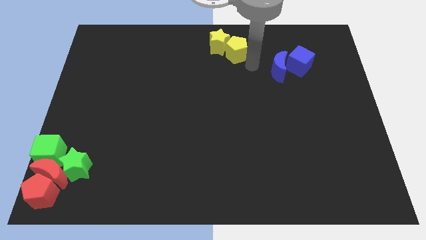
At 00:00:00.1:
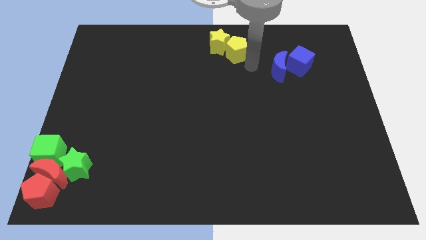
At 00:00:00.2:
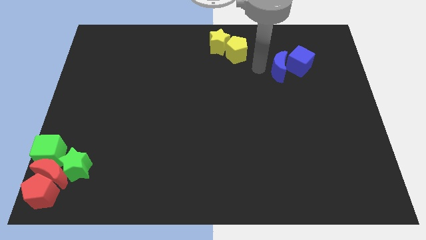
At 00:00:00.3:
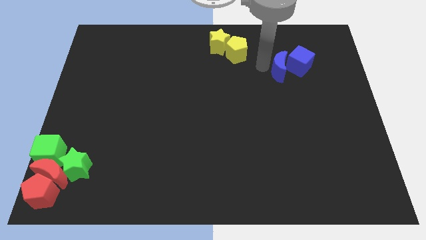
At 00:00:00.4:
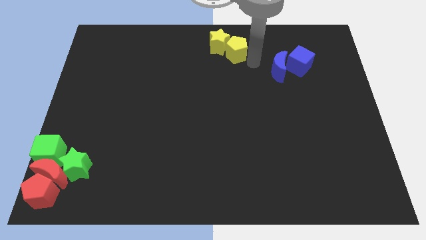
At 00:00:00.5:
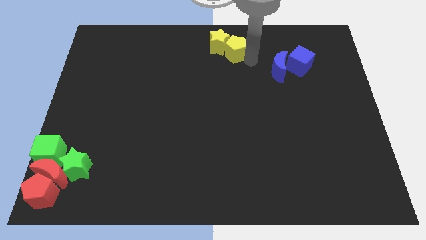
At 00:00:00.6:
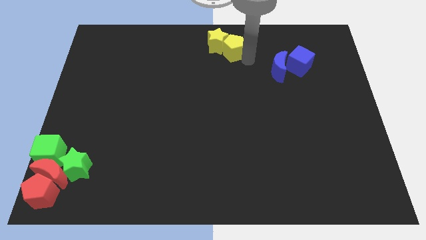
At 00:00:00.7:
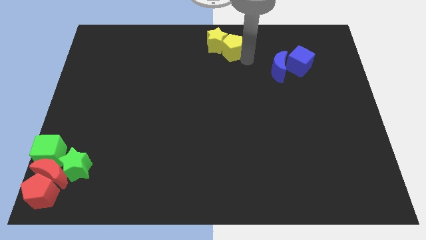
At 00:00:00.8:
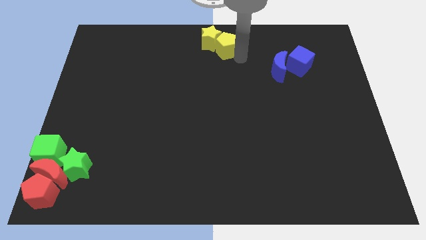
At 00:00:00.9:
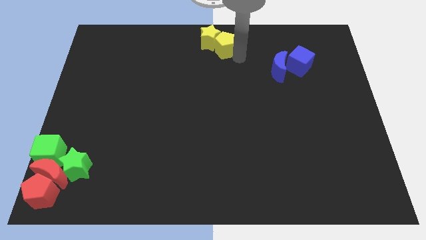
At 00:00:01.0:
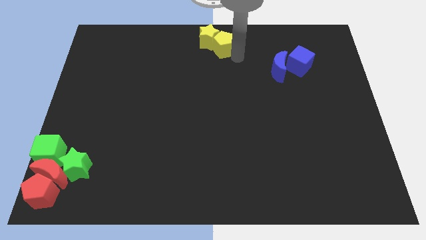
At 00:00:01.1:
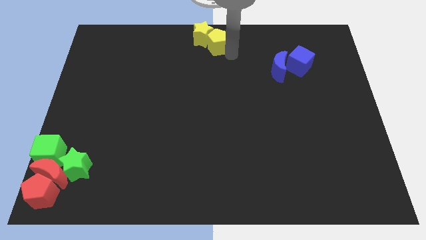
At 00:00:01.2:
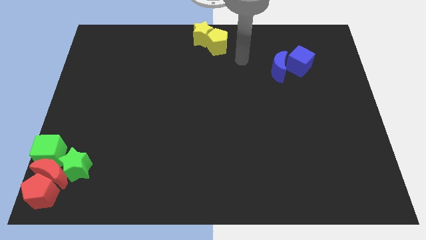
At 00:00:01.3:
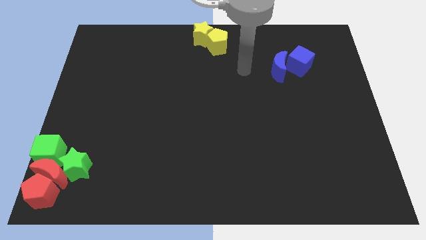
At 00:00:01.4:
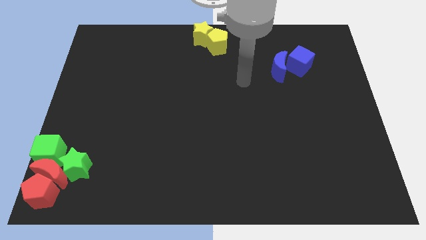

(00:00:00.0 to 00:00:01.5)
push the yellow pentagon into the yellow star

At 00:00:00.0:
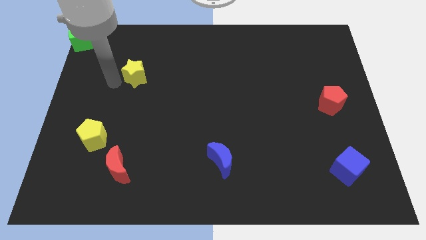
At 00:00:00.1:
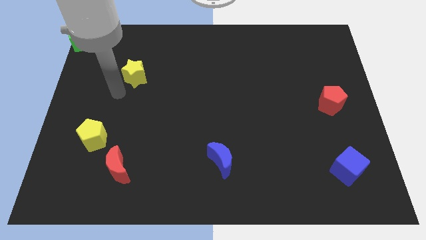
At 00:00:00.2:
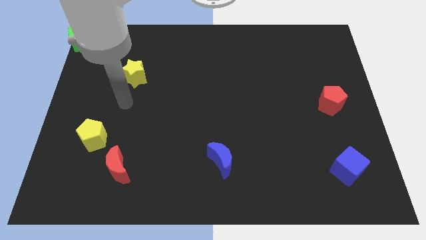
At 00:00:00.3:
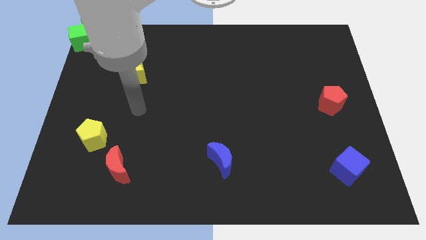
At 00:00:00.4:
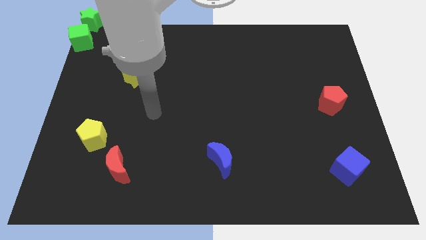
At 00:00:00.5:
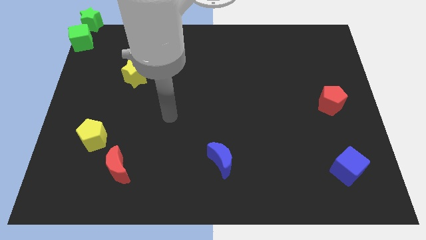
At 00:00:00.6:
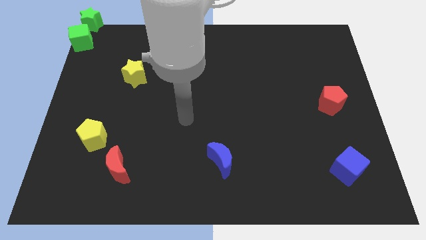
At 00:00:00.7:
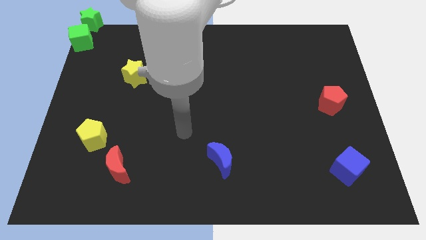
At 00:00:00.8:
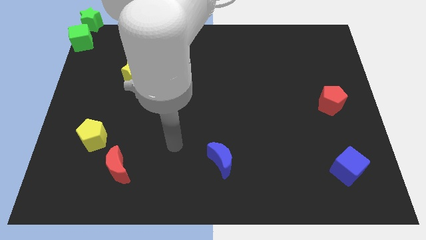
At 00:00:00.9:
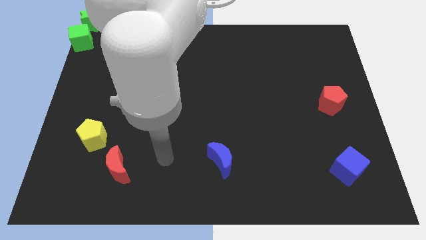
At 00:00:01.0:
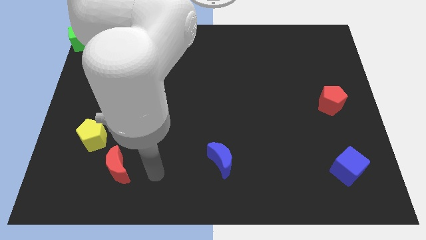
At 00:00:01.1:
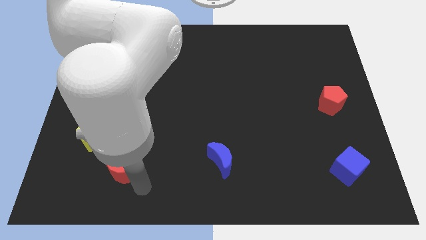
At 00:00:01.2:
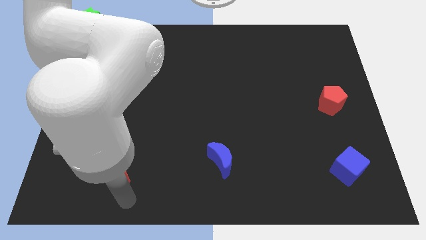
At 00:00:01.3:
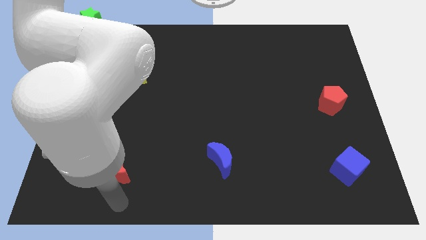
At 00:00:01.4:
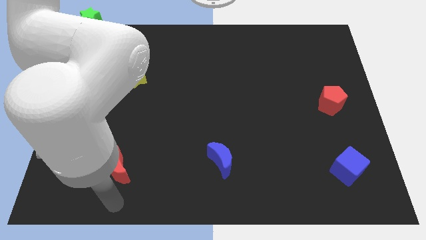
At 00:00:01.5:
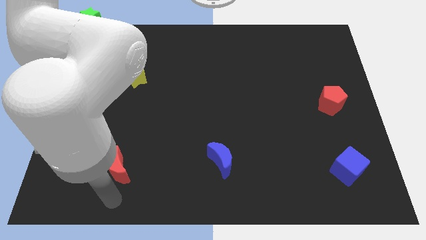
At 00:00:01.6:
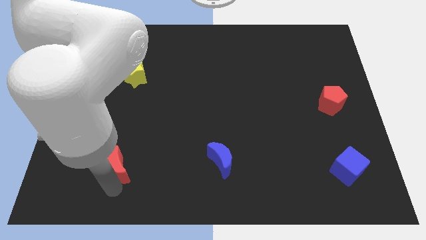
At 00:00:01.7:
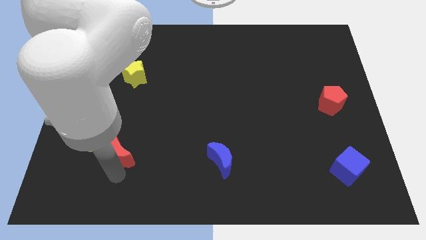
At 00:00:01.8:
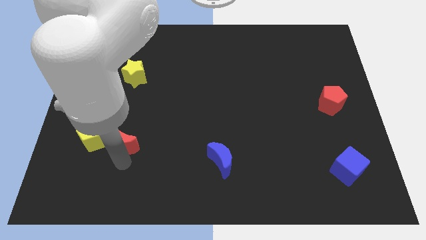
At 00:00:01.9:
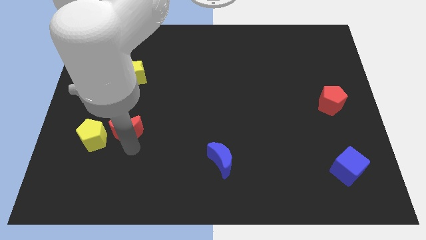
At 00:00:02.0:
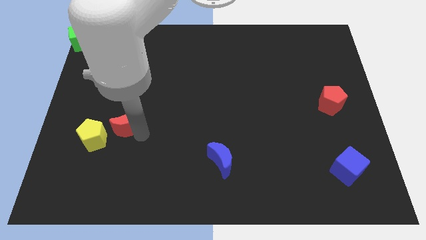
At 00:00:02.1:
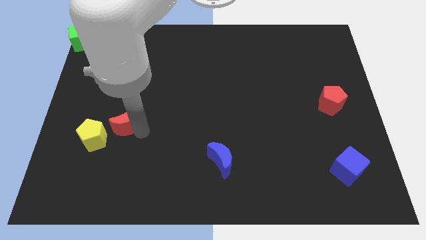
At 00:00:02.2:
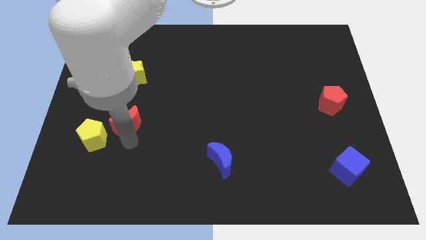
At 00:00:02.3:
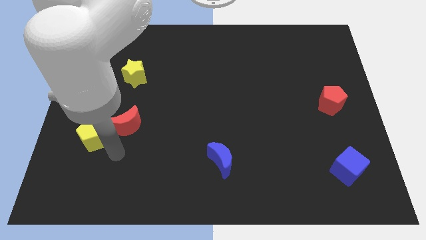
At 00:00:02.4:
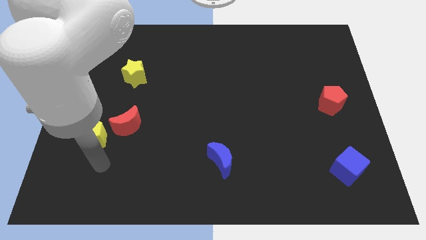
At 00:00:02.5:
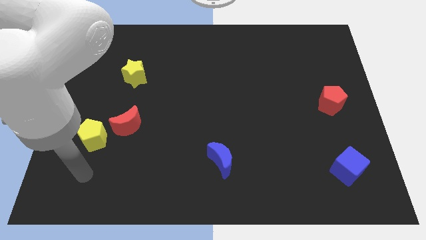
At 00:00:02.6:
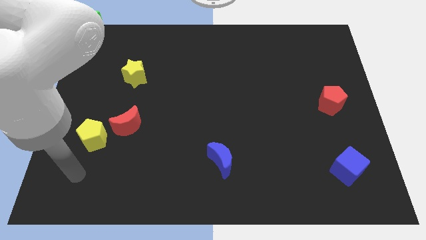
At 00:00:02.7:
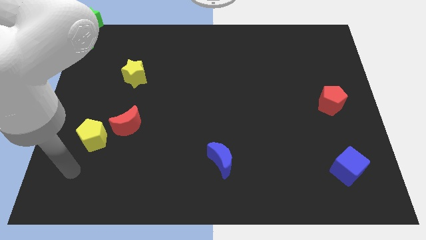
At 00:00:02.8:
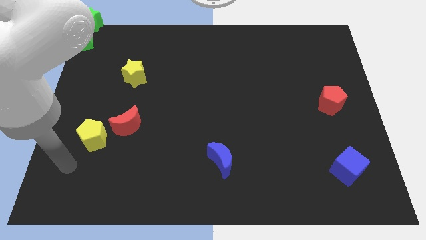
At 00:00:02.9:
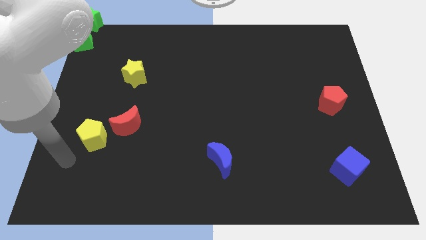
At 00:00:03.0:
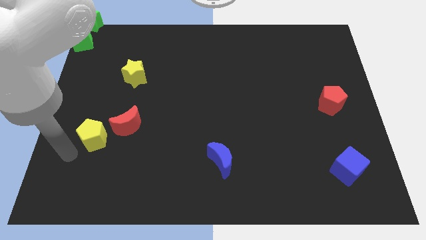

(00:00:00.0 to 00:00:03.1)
place the red moon at the top right side of yellow pentagon

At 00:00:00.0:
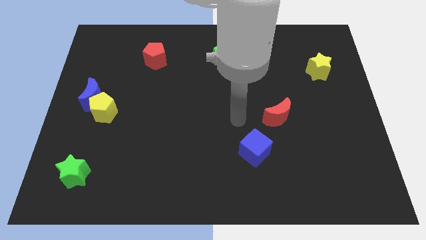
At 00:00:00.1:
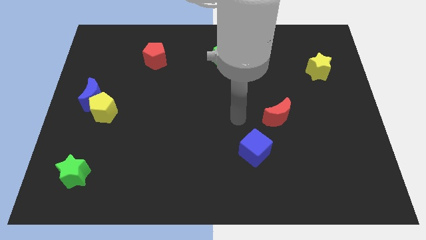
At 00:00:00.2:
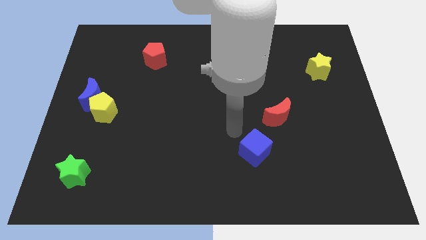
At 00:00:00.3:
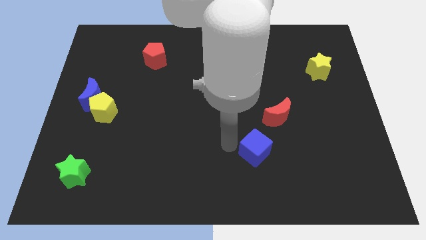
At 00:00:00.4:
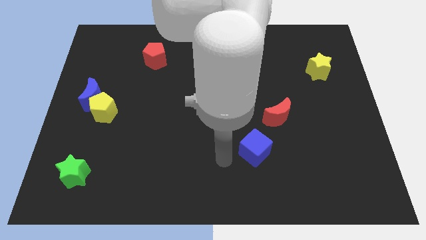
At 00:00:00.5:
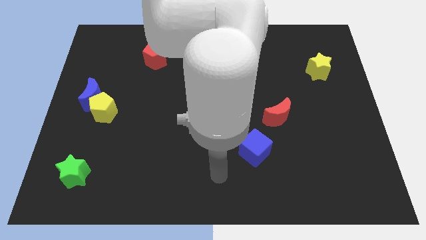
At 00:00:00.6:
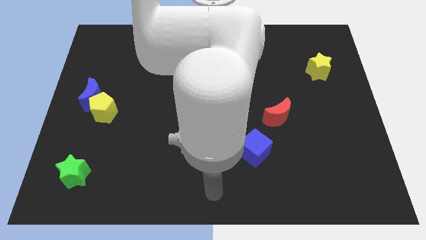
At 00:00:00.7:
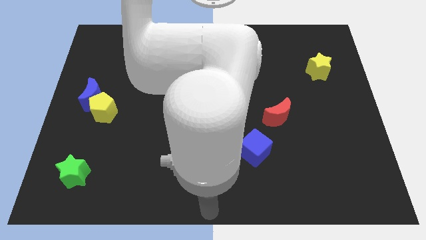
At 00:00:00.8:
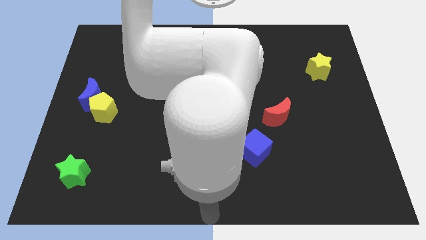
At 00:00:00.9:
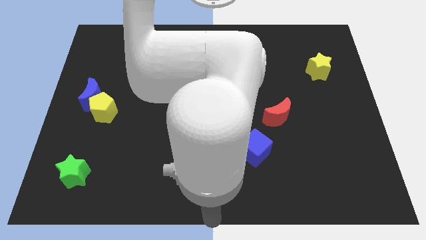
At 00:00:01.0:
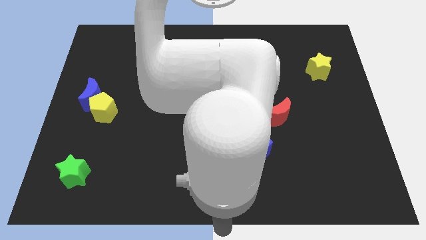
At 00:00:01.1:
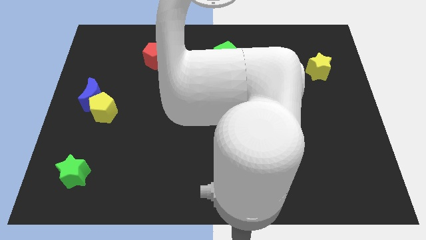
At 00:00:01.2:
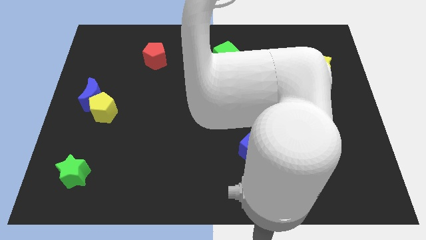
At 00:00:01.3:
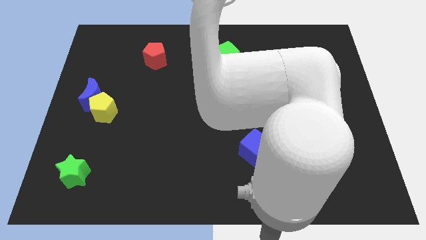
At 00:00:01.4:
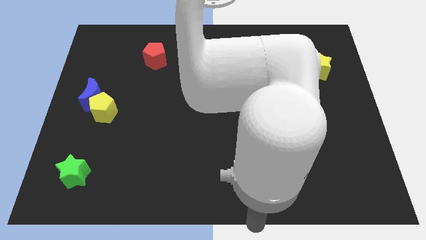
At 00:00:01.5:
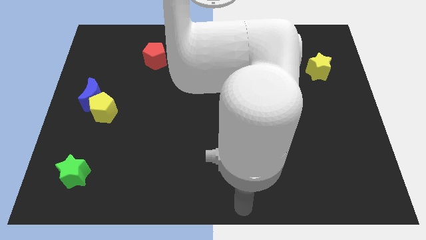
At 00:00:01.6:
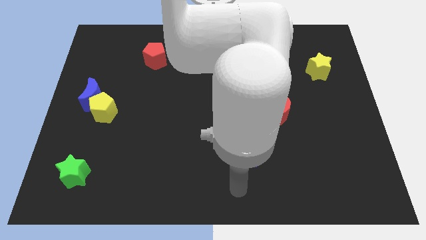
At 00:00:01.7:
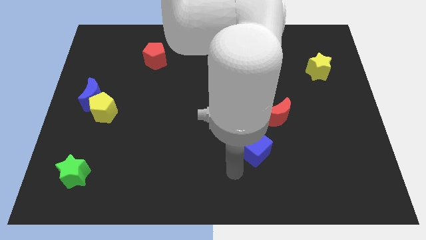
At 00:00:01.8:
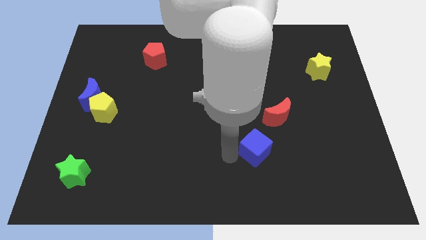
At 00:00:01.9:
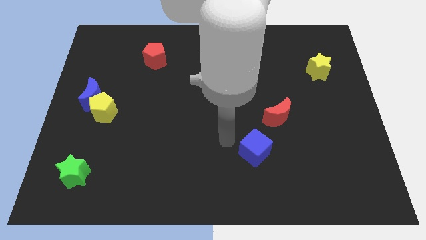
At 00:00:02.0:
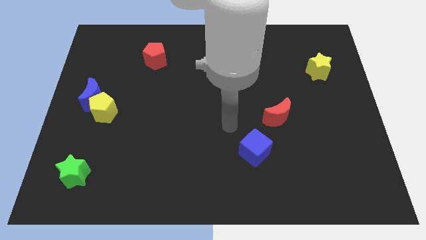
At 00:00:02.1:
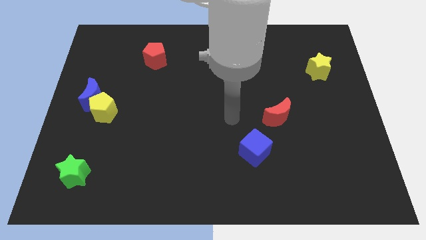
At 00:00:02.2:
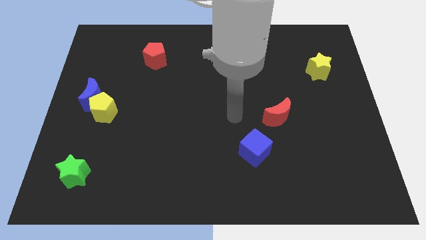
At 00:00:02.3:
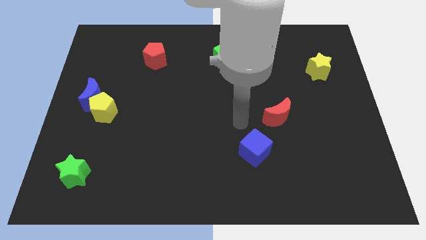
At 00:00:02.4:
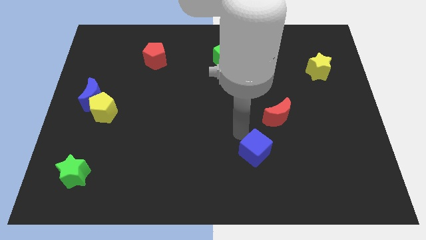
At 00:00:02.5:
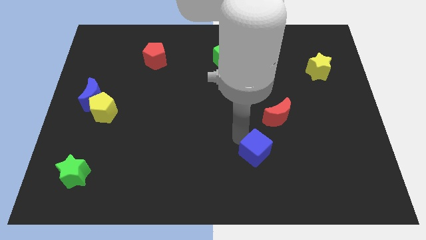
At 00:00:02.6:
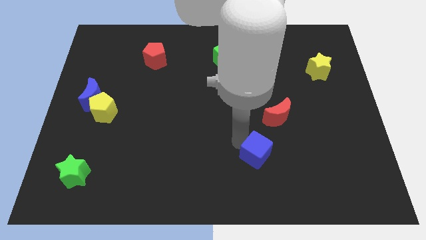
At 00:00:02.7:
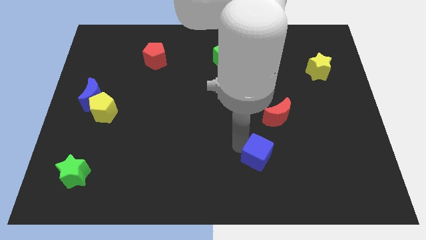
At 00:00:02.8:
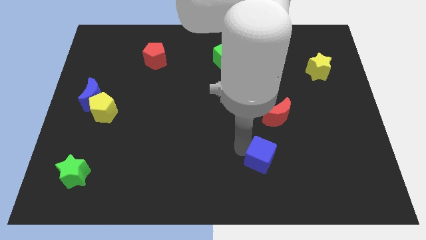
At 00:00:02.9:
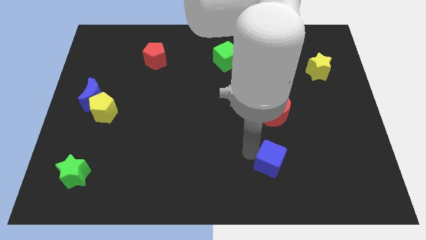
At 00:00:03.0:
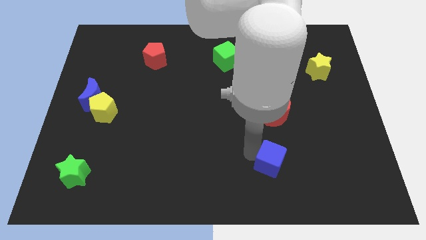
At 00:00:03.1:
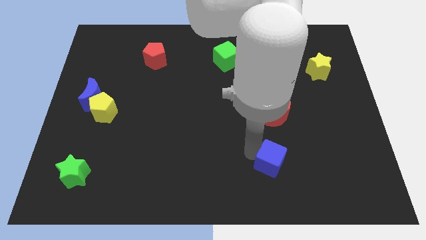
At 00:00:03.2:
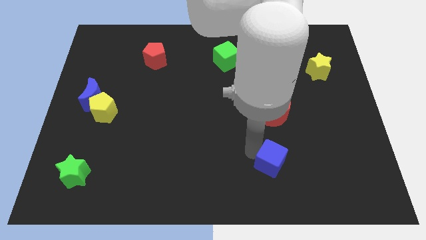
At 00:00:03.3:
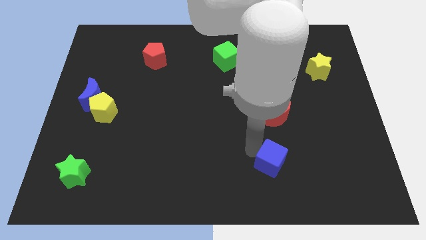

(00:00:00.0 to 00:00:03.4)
push the blue cube to the bottom of the red crescent

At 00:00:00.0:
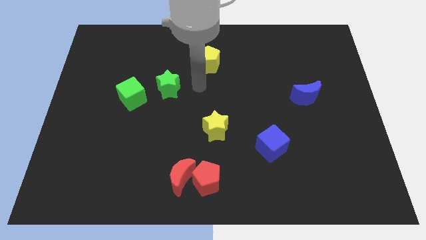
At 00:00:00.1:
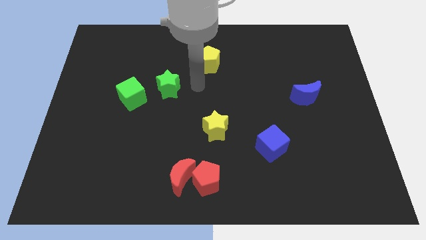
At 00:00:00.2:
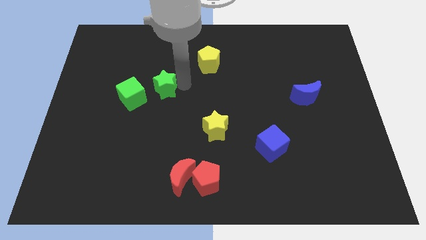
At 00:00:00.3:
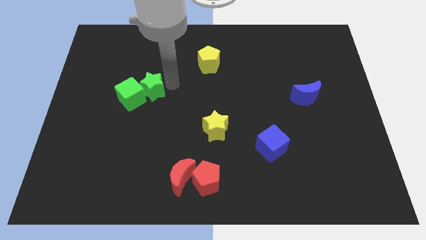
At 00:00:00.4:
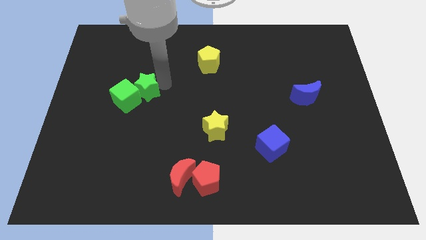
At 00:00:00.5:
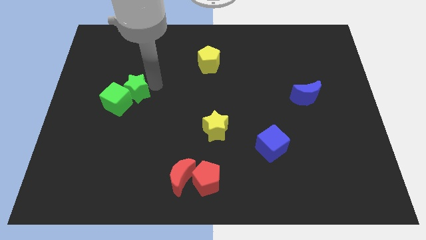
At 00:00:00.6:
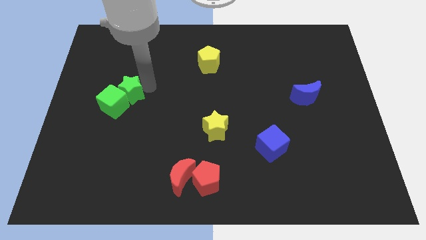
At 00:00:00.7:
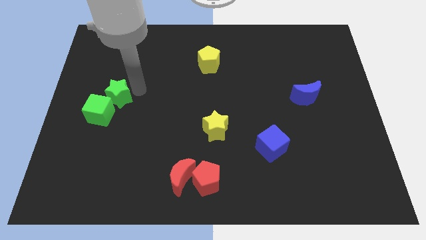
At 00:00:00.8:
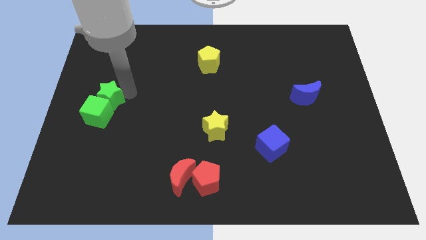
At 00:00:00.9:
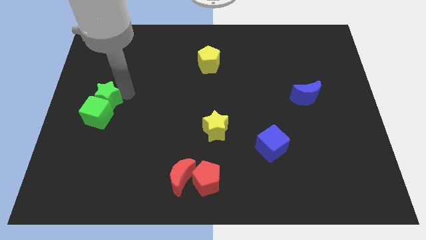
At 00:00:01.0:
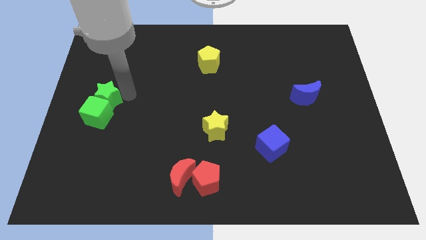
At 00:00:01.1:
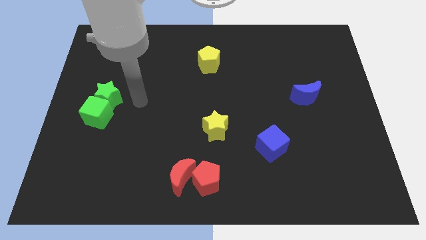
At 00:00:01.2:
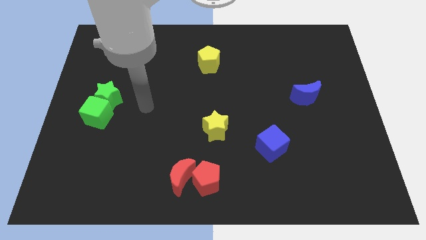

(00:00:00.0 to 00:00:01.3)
push the green star into green cube
